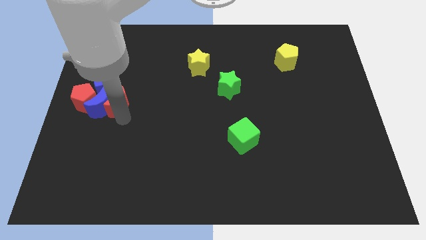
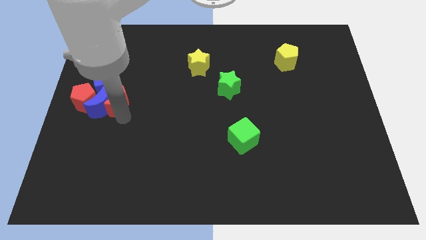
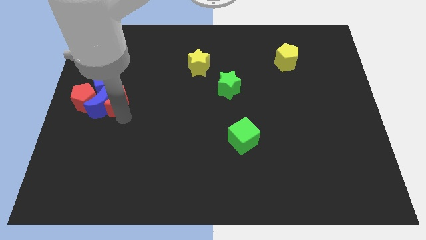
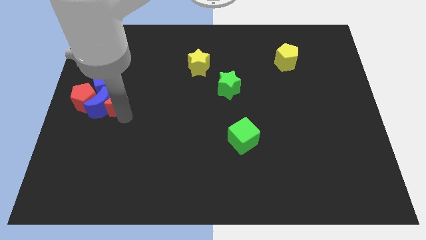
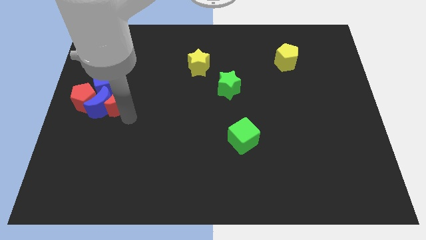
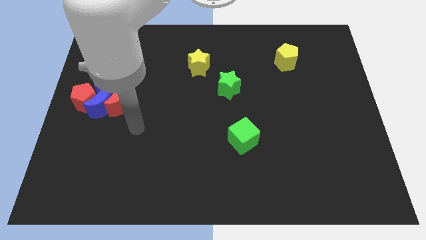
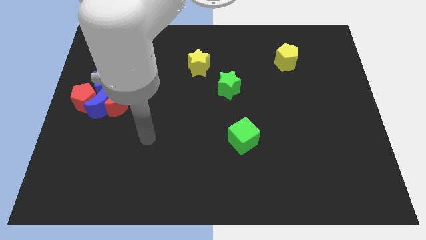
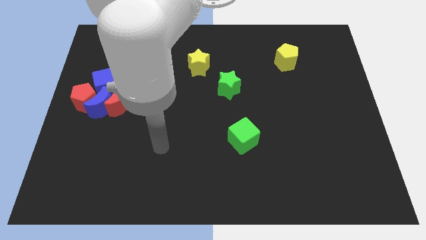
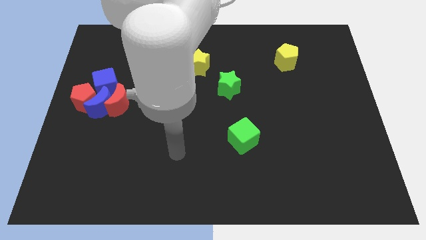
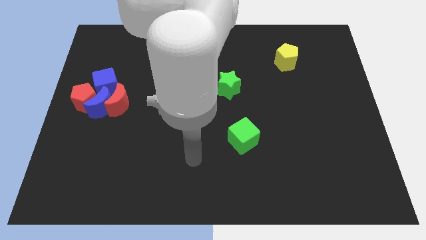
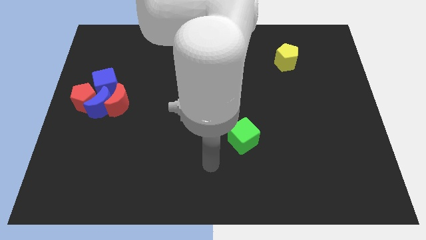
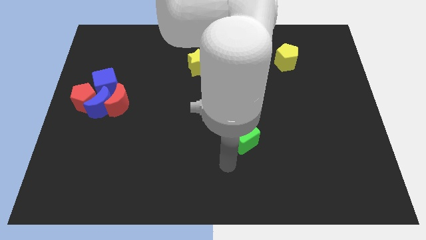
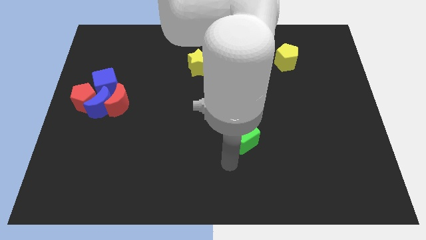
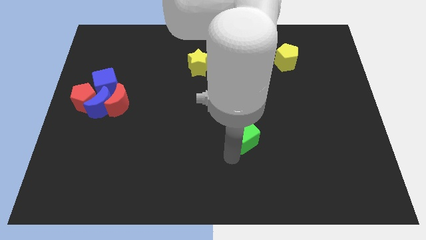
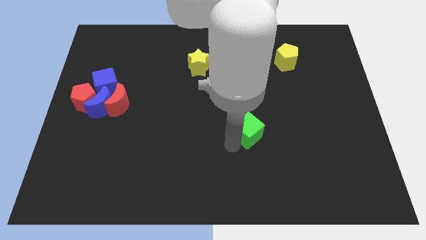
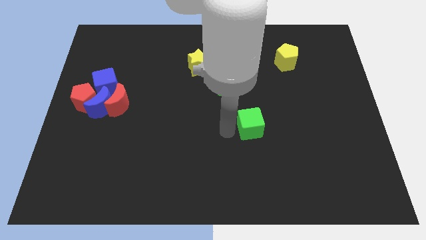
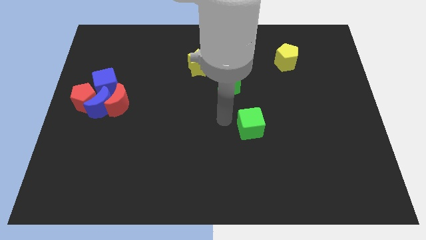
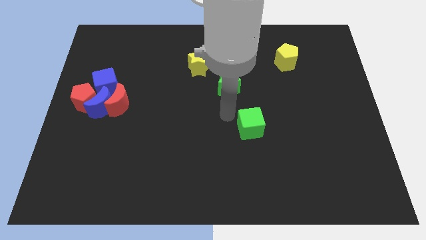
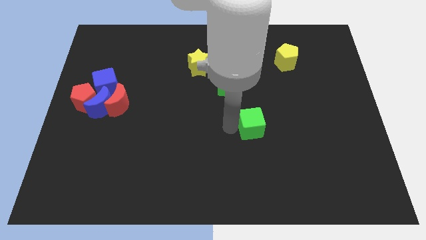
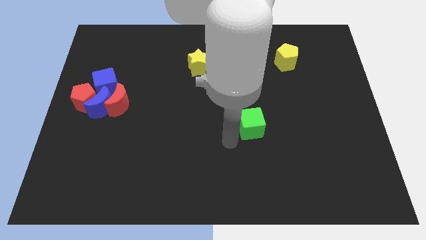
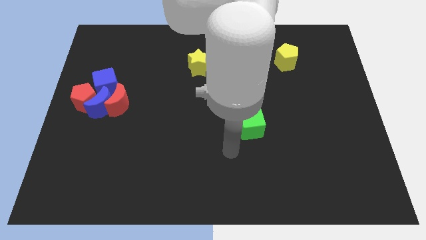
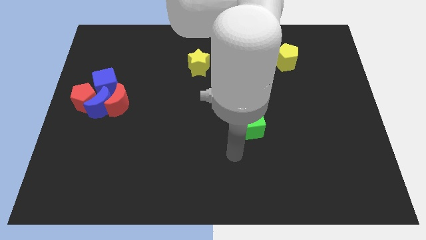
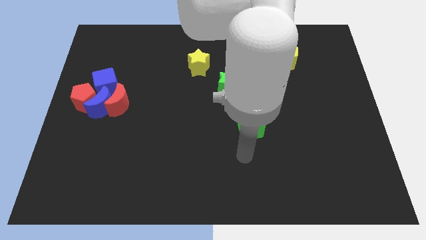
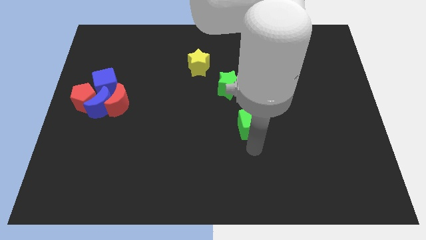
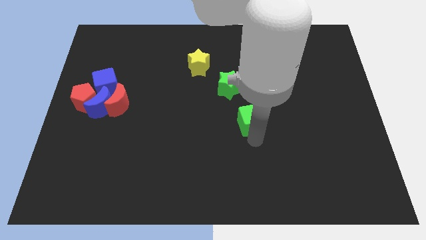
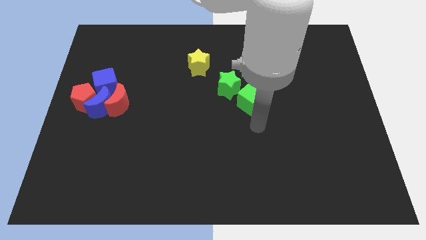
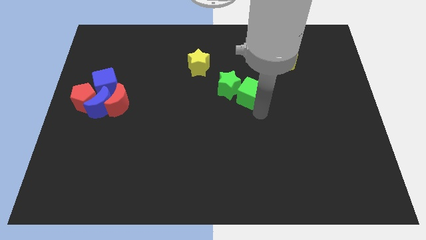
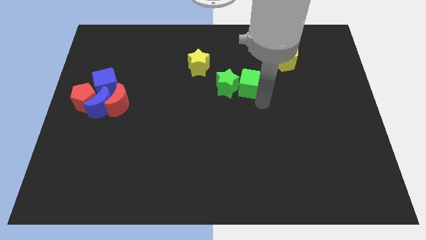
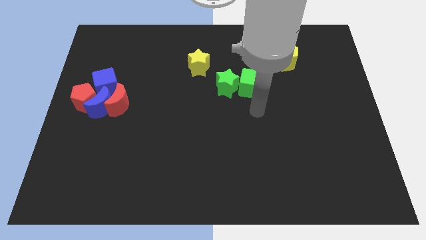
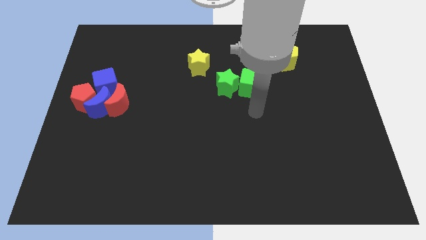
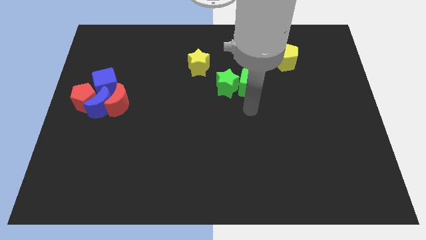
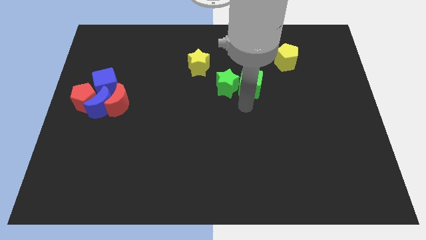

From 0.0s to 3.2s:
place the green cube to the right of the green star

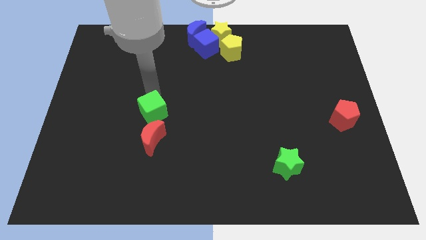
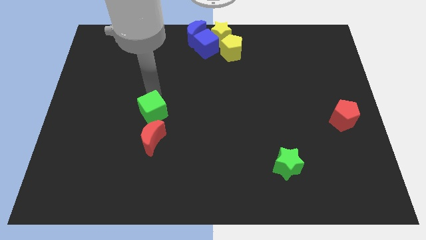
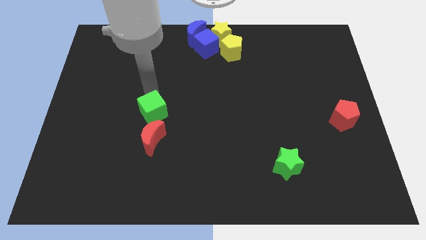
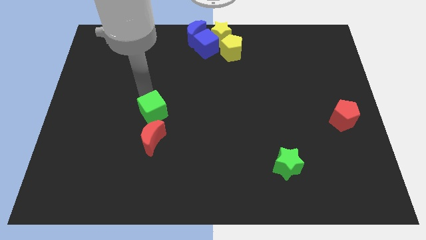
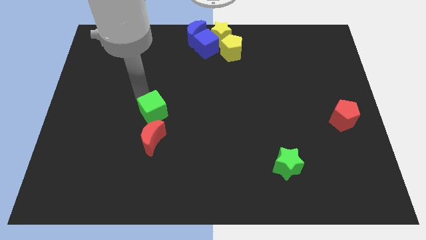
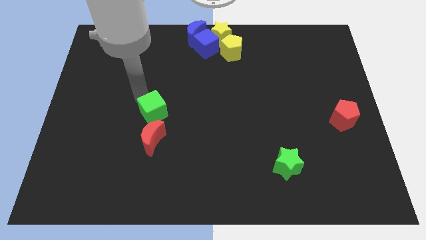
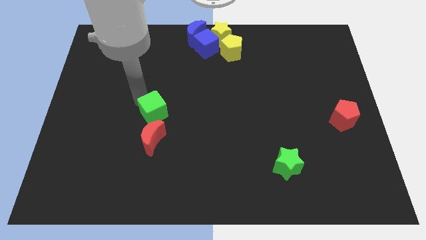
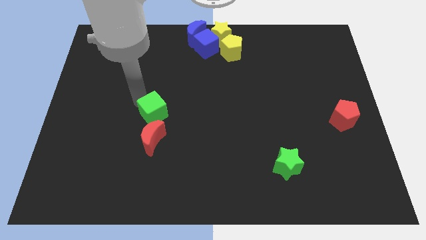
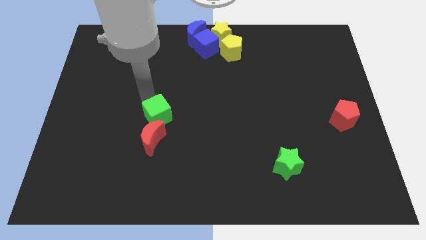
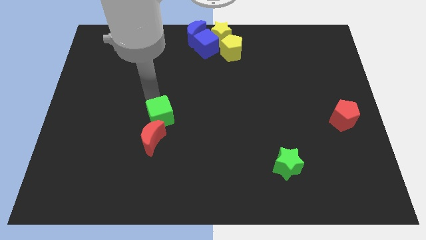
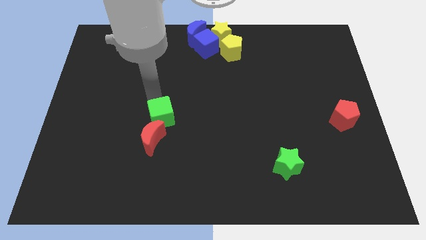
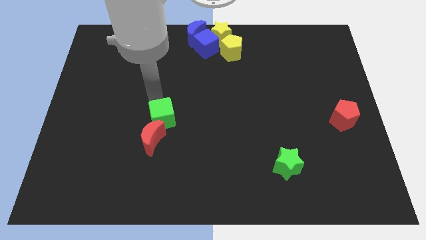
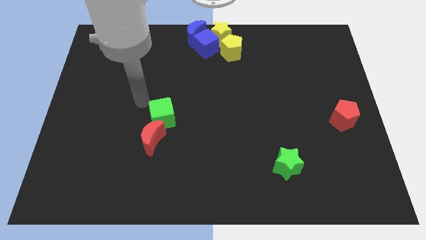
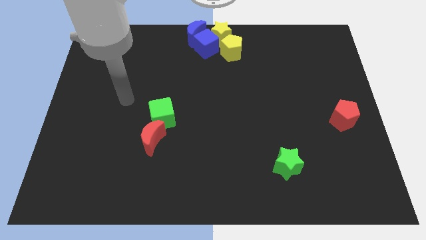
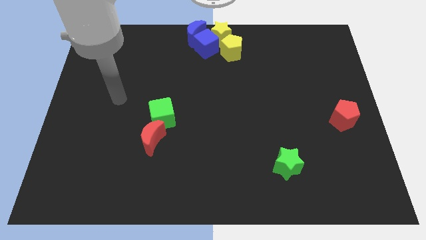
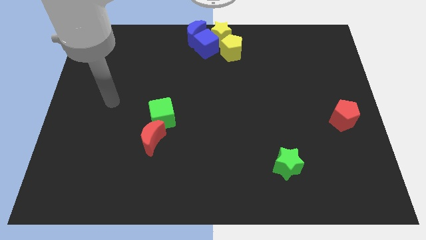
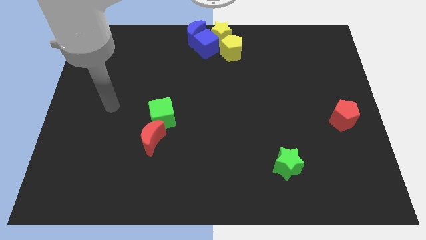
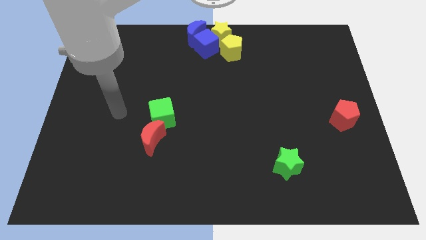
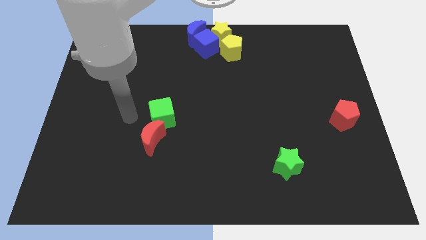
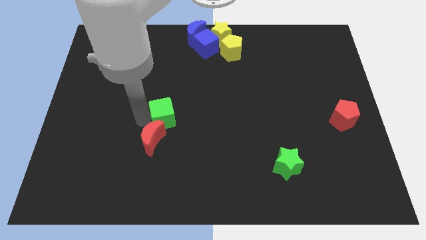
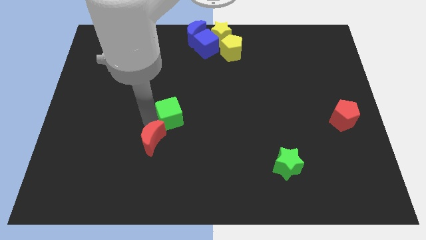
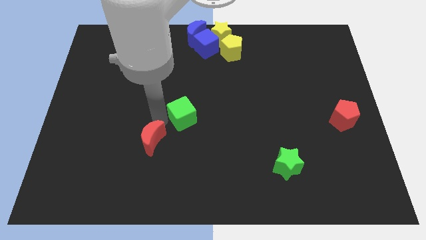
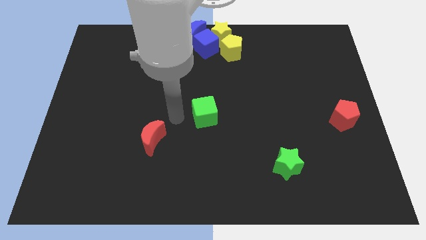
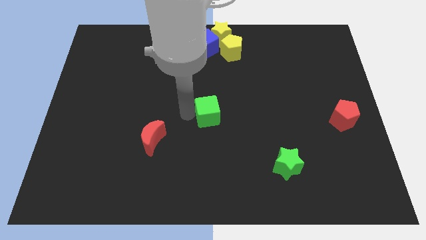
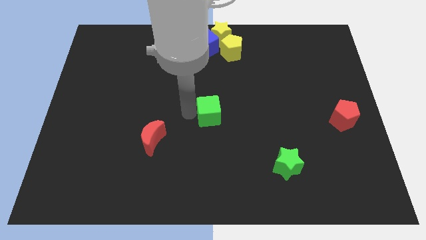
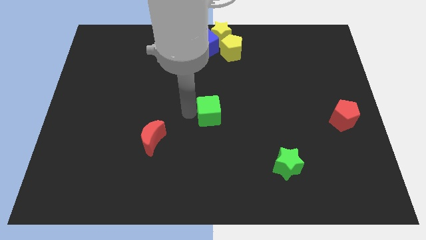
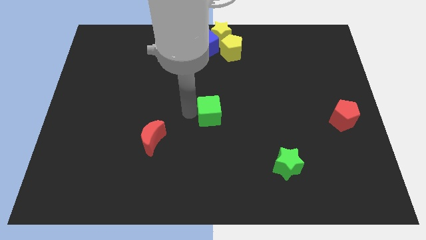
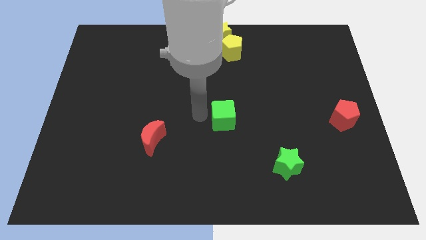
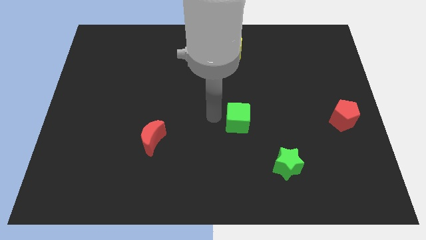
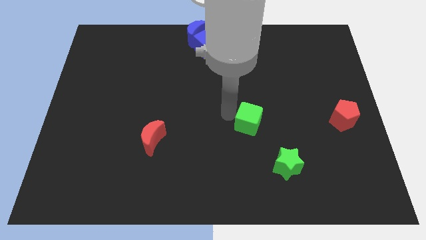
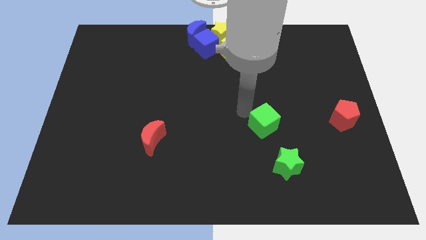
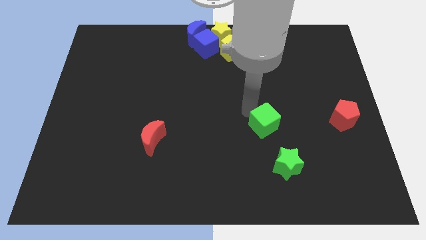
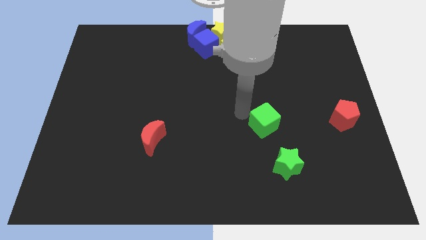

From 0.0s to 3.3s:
move the green cube to the right

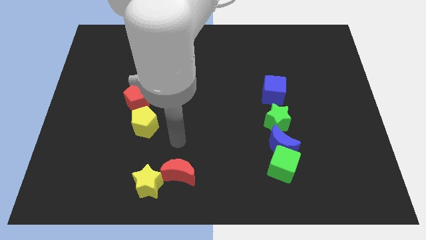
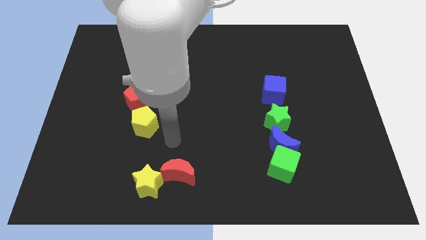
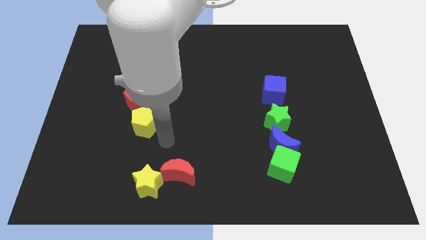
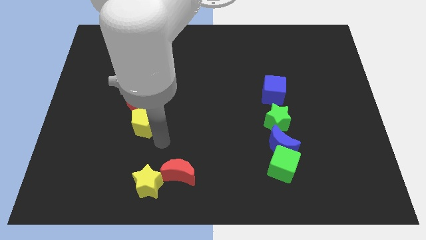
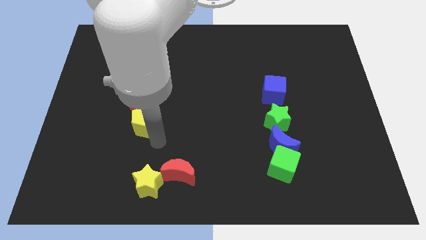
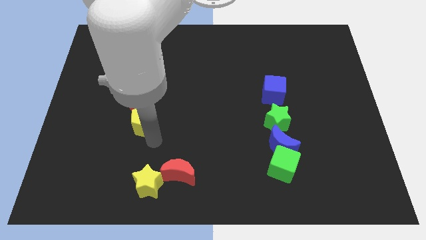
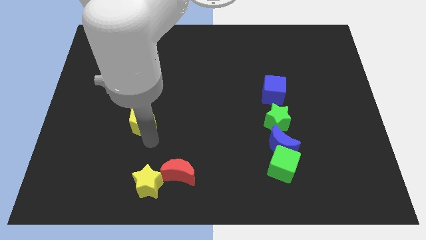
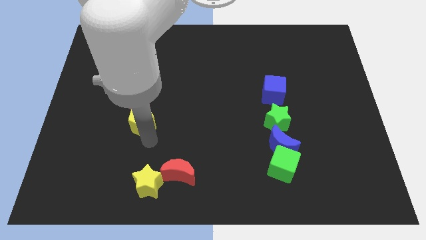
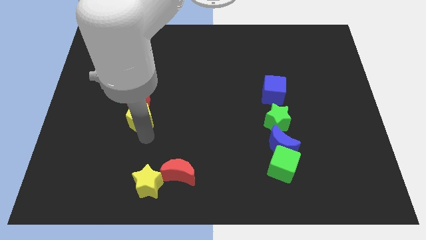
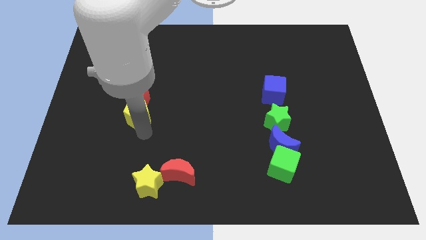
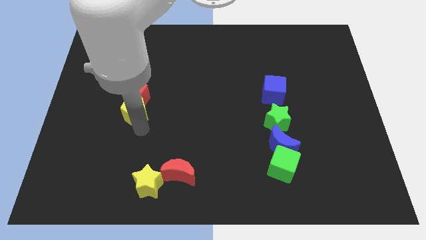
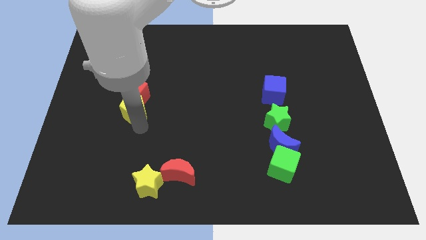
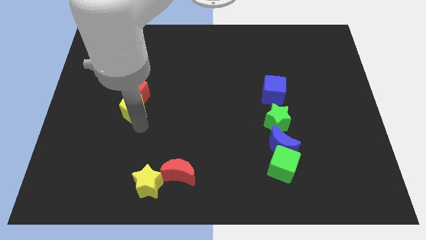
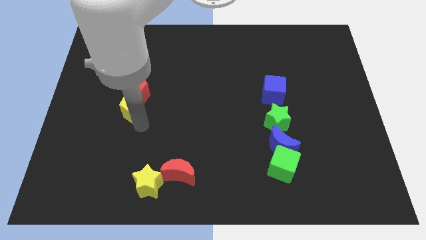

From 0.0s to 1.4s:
place the yellow pentagon below the red pentagon

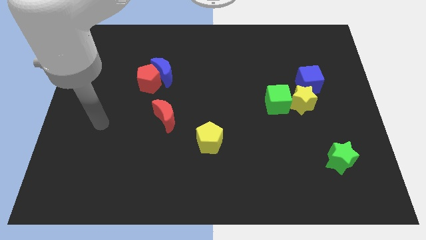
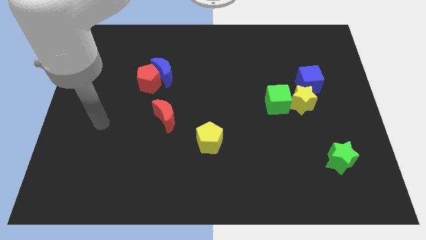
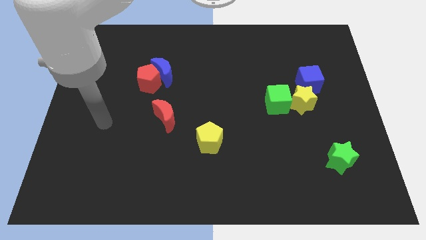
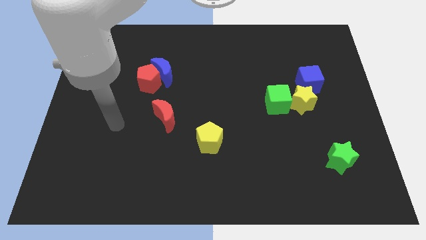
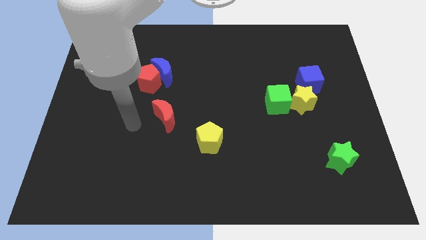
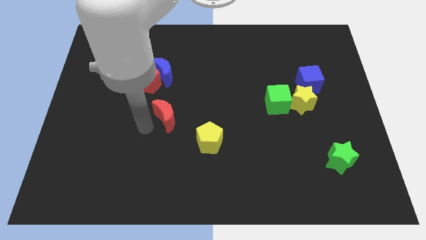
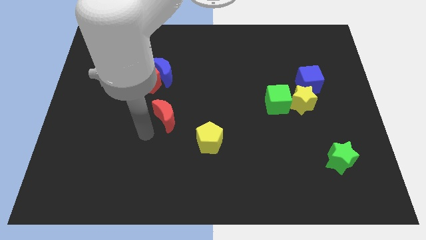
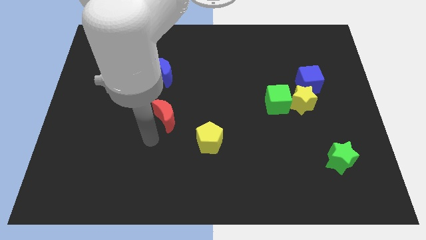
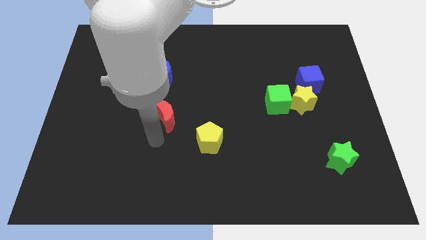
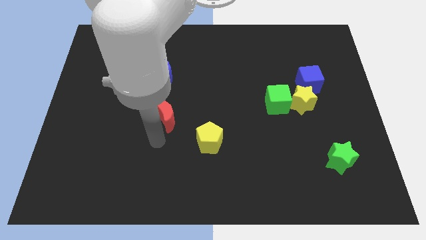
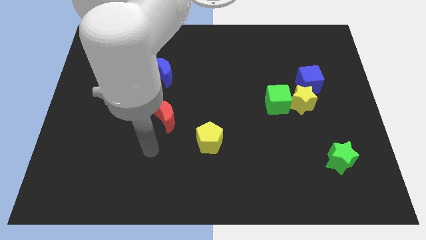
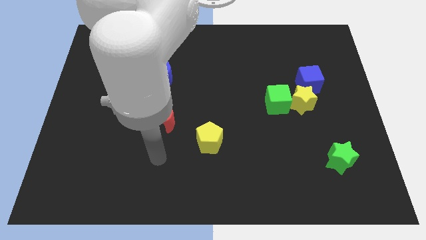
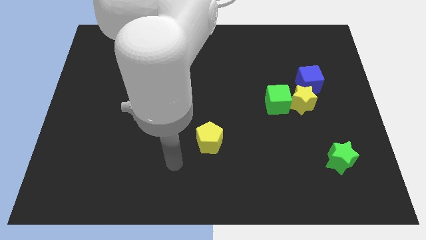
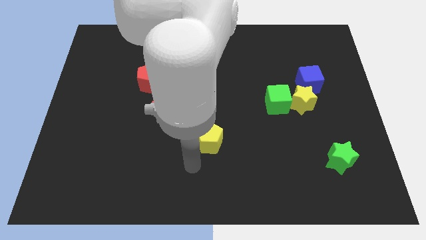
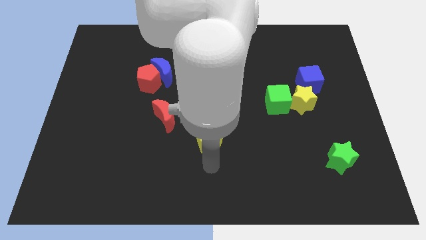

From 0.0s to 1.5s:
point your arm below the yellow pentagon
